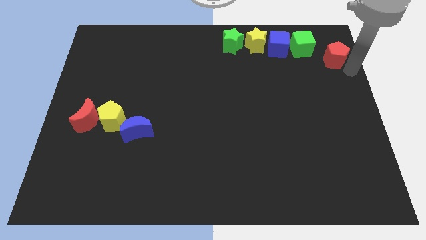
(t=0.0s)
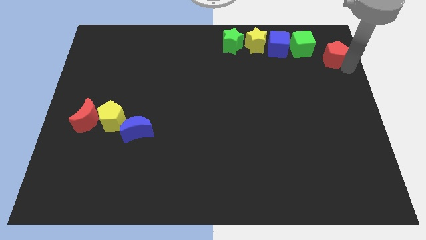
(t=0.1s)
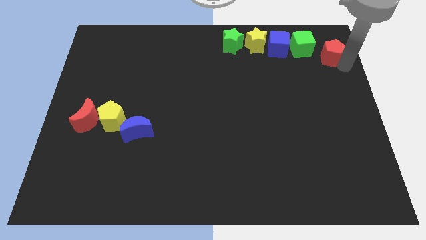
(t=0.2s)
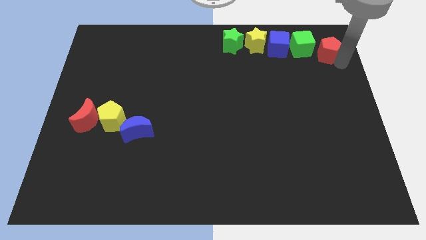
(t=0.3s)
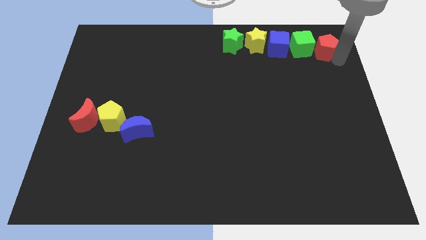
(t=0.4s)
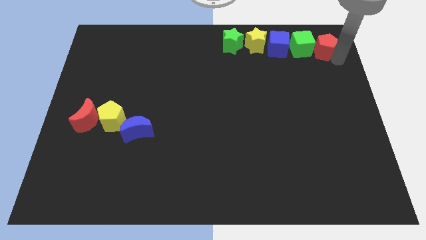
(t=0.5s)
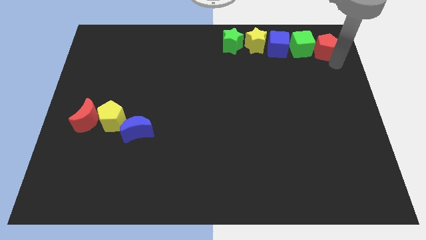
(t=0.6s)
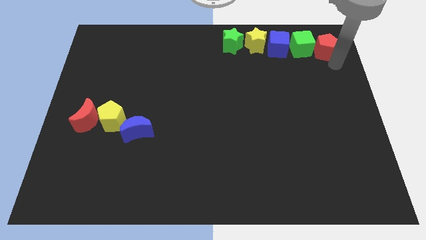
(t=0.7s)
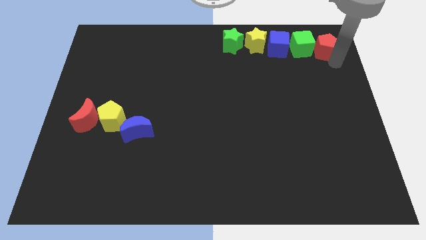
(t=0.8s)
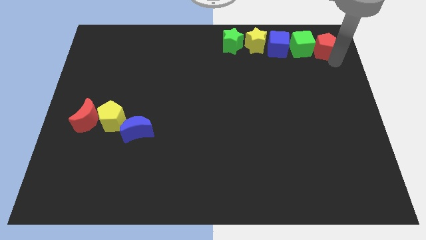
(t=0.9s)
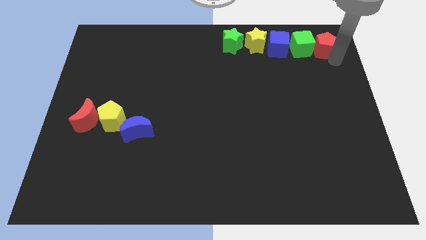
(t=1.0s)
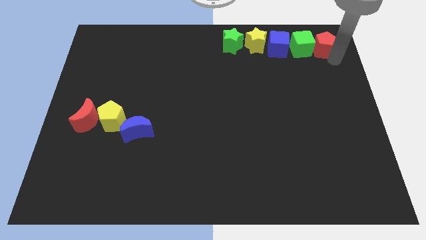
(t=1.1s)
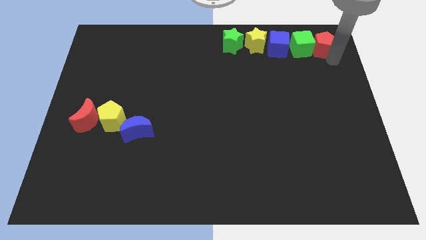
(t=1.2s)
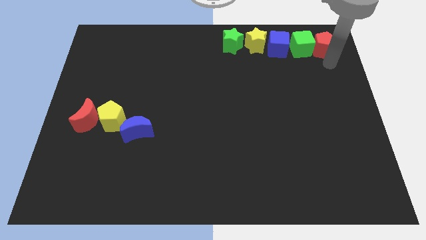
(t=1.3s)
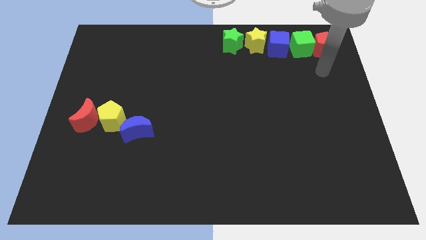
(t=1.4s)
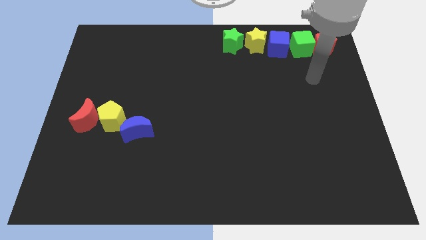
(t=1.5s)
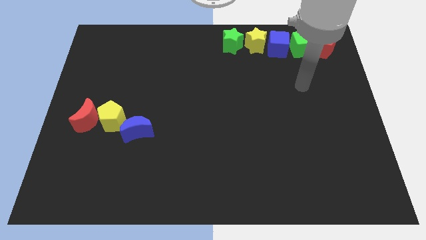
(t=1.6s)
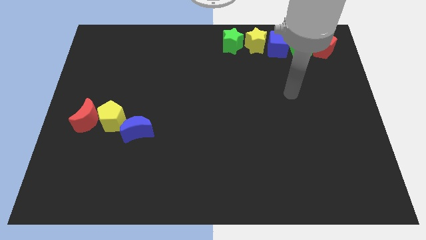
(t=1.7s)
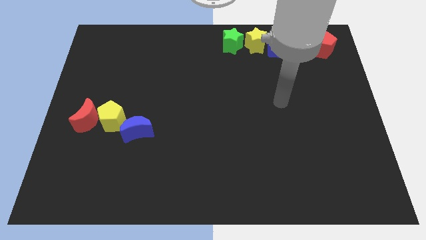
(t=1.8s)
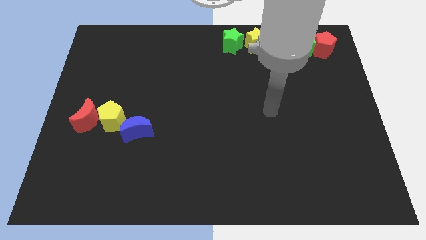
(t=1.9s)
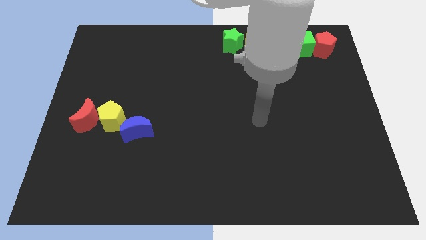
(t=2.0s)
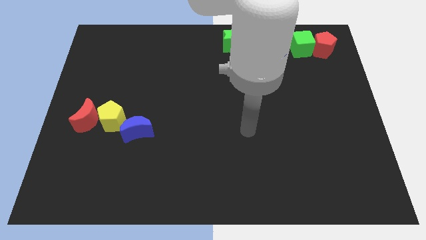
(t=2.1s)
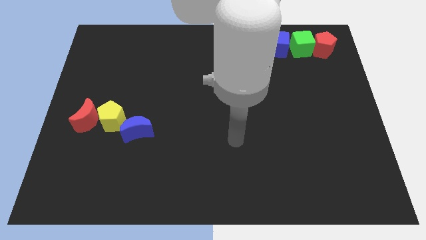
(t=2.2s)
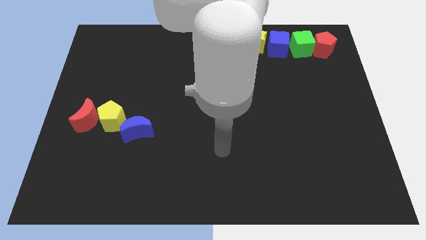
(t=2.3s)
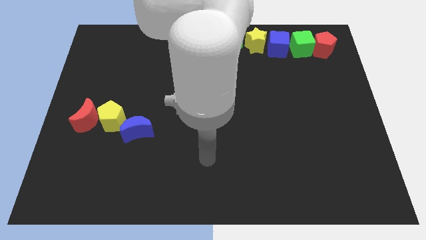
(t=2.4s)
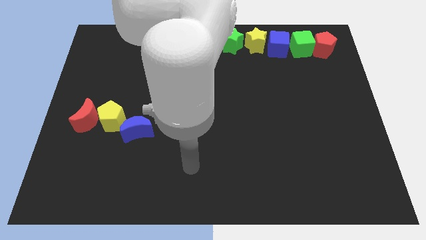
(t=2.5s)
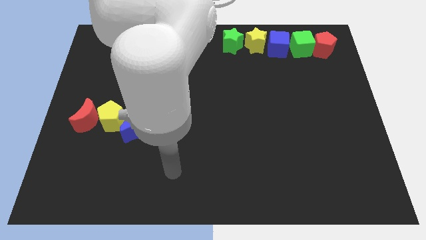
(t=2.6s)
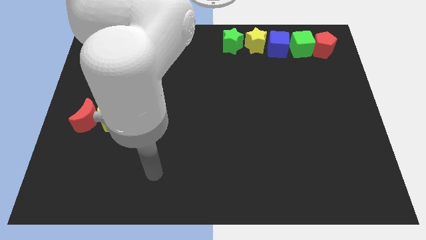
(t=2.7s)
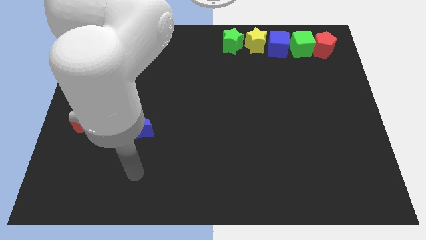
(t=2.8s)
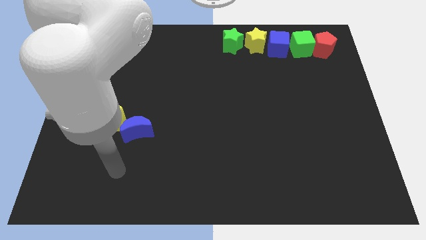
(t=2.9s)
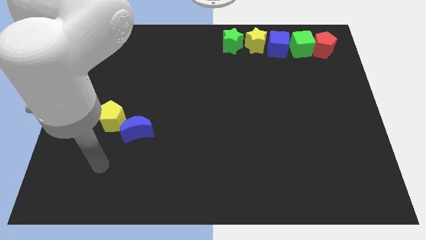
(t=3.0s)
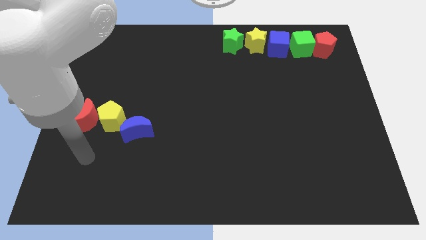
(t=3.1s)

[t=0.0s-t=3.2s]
place the red pentagon beside green cube to form a vertical line

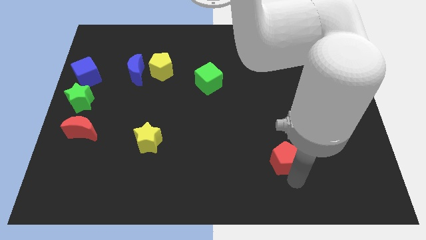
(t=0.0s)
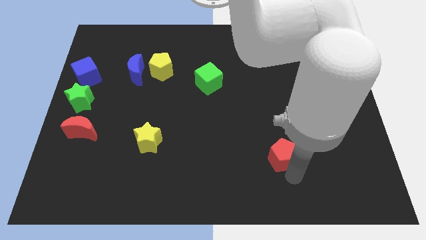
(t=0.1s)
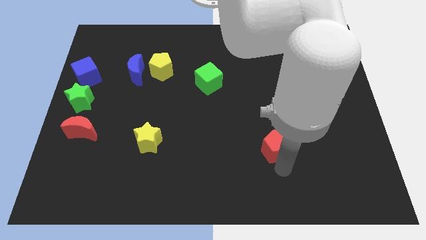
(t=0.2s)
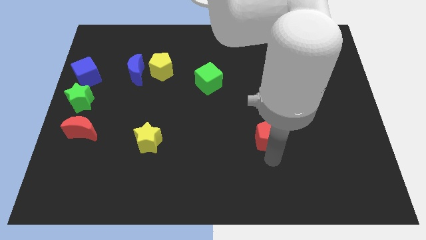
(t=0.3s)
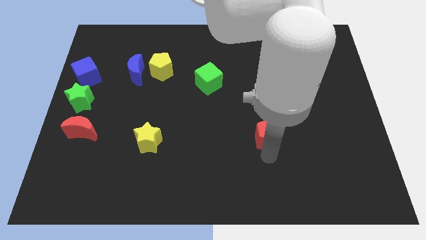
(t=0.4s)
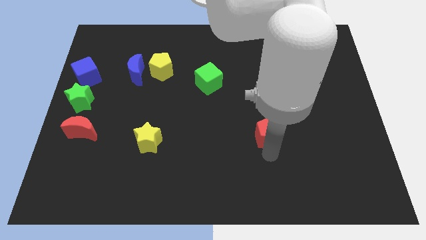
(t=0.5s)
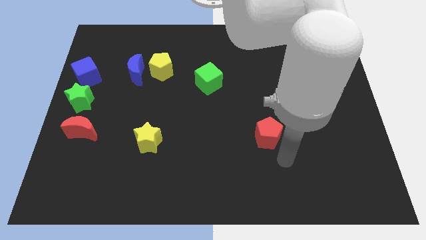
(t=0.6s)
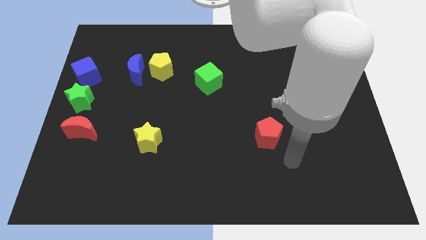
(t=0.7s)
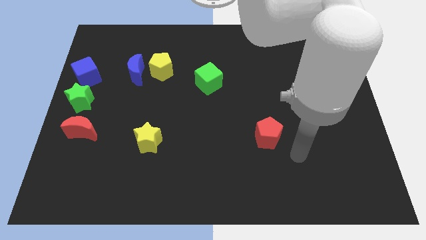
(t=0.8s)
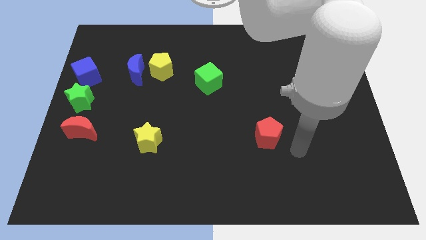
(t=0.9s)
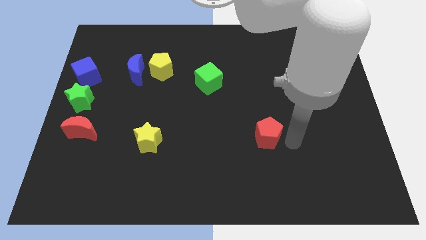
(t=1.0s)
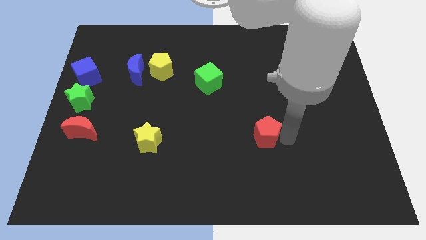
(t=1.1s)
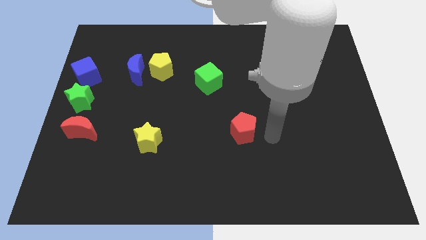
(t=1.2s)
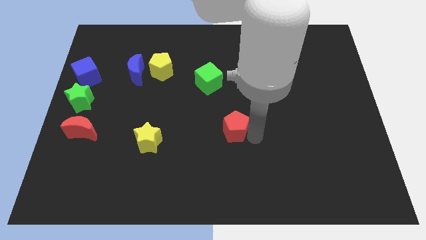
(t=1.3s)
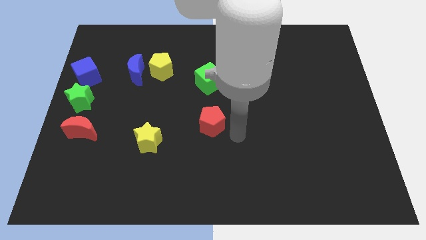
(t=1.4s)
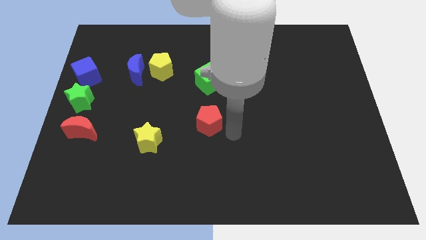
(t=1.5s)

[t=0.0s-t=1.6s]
move the red pentagon vertically parallel to the green cube

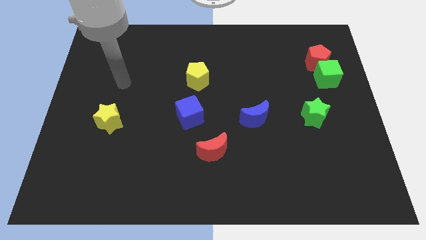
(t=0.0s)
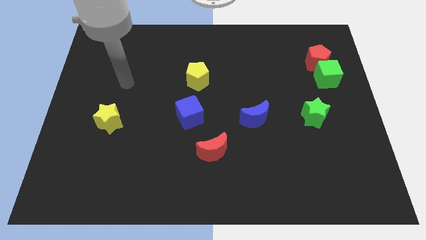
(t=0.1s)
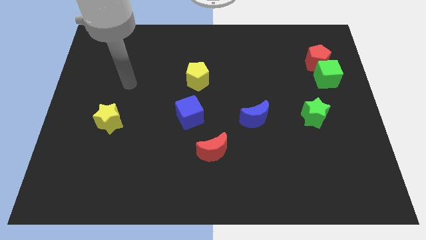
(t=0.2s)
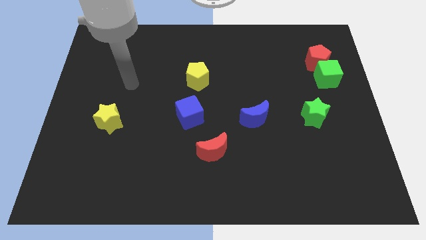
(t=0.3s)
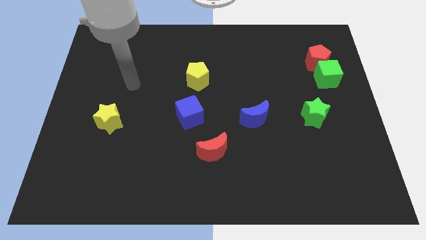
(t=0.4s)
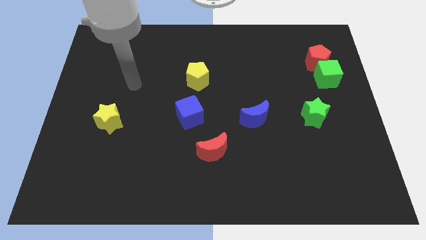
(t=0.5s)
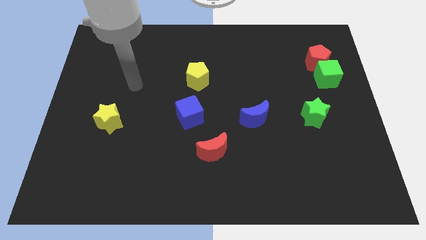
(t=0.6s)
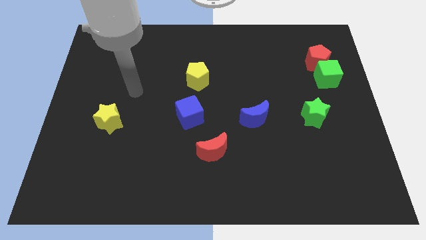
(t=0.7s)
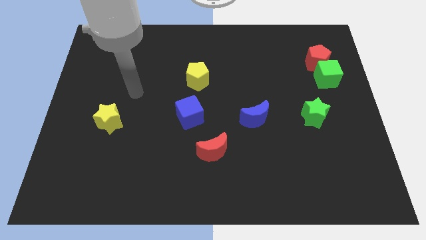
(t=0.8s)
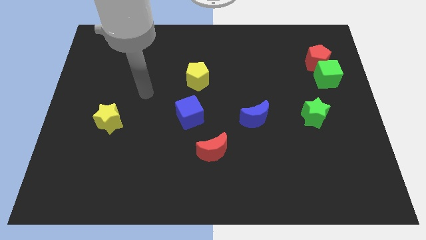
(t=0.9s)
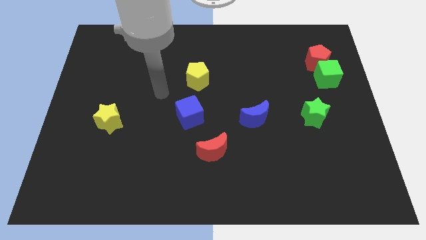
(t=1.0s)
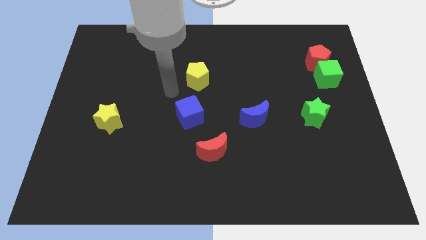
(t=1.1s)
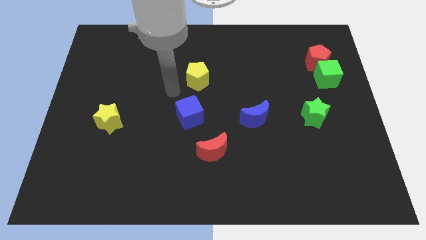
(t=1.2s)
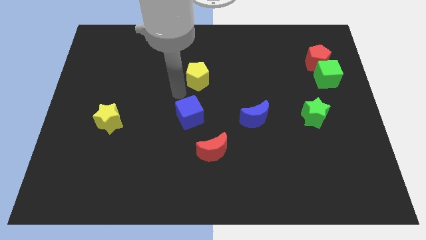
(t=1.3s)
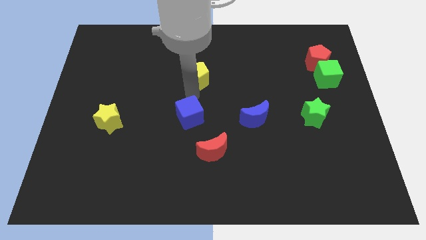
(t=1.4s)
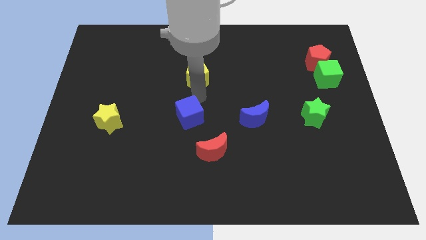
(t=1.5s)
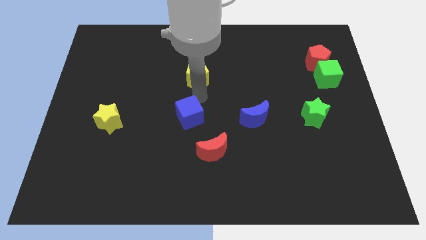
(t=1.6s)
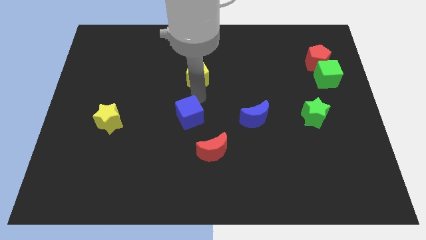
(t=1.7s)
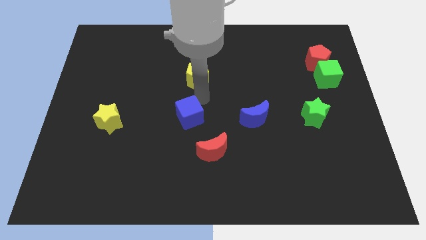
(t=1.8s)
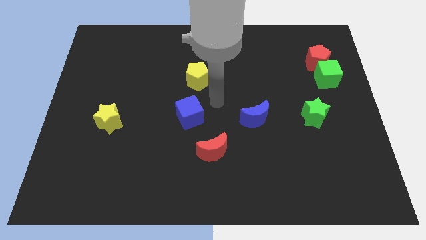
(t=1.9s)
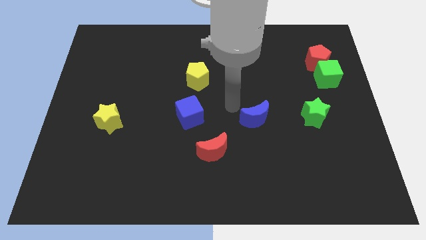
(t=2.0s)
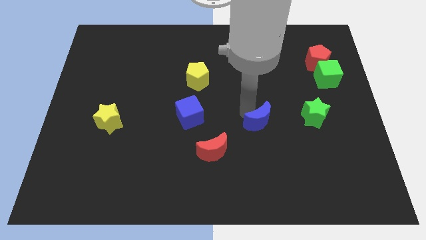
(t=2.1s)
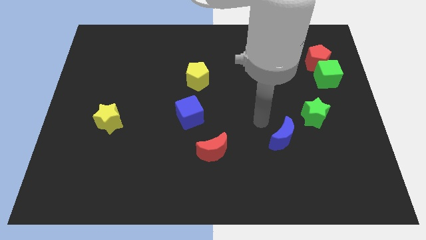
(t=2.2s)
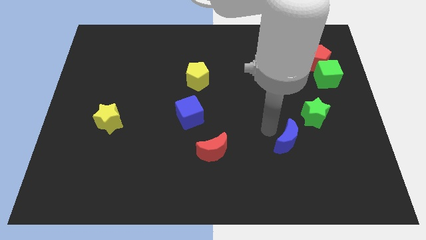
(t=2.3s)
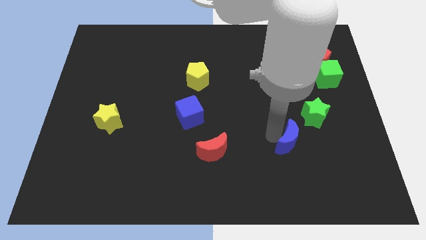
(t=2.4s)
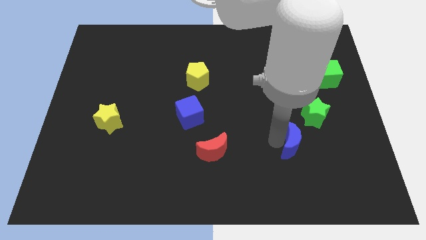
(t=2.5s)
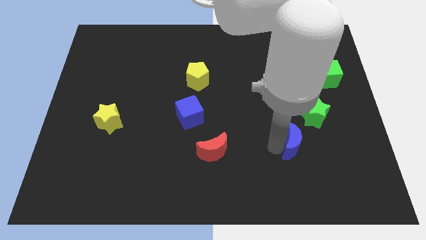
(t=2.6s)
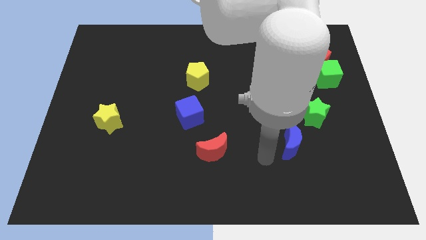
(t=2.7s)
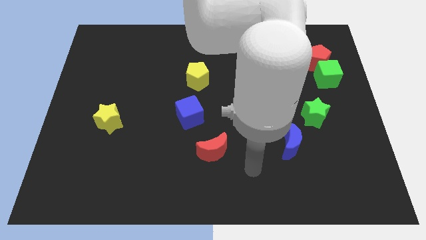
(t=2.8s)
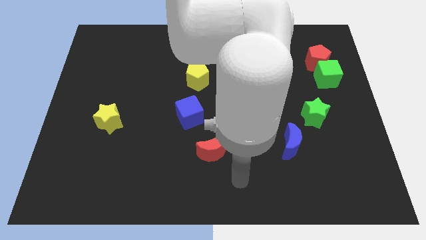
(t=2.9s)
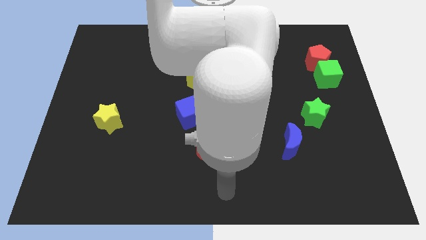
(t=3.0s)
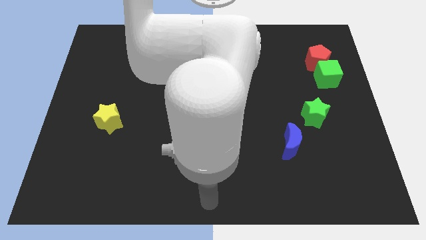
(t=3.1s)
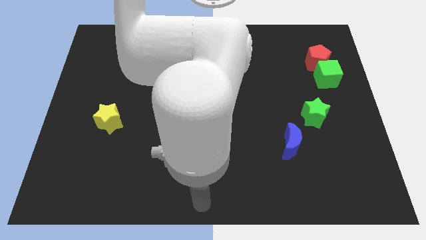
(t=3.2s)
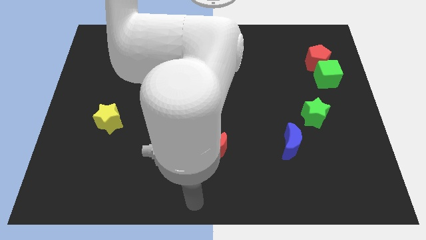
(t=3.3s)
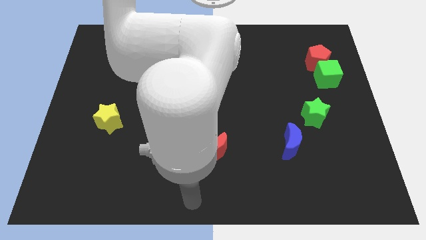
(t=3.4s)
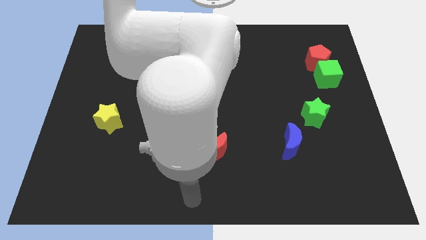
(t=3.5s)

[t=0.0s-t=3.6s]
slide the blue moon diagonally on the bottom left side of the green star

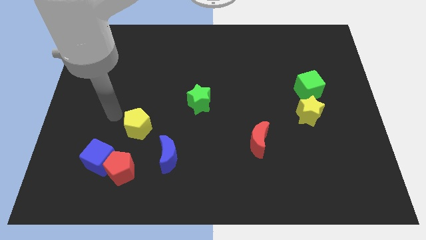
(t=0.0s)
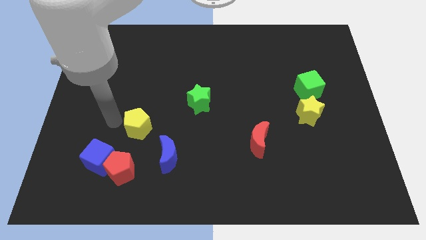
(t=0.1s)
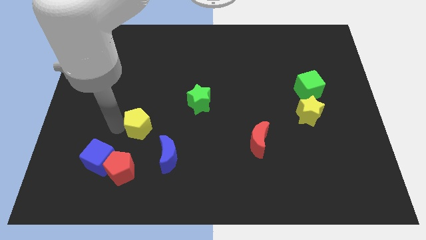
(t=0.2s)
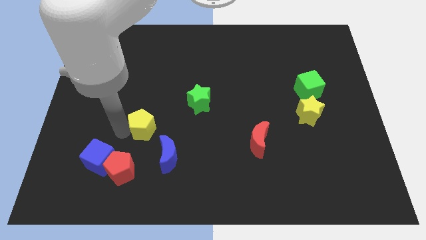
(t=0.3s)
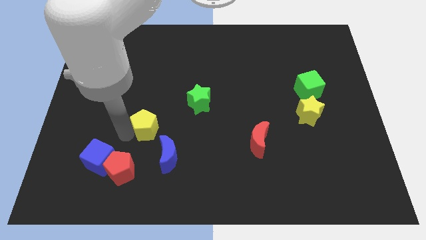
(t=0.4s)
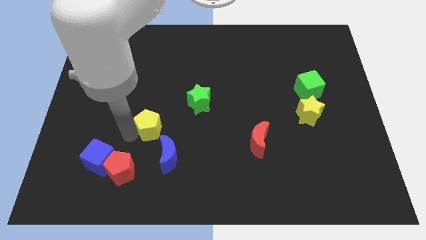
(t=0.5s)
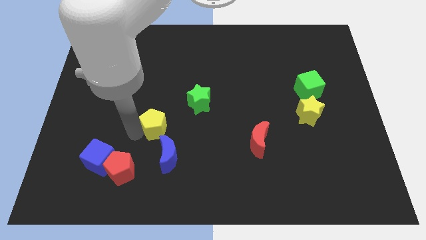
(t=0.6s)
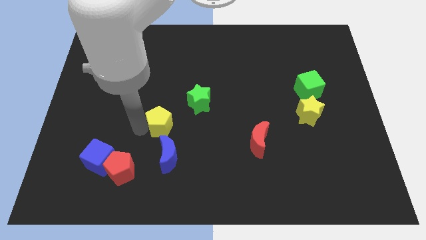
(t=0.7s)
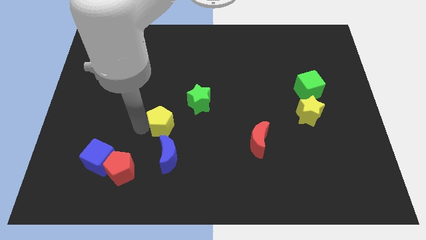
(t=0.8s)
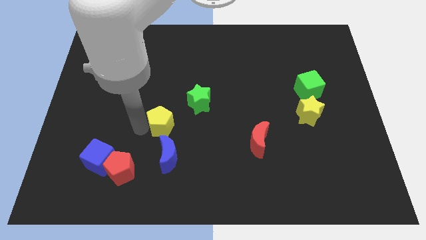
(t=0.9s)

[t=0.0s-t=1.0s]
place the yellow pentagon above the blue moon
